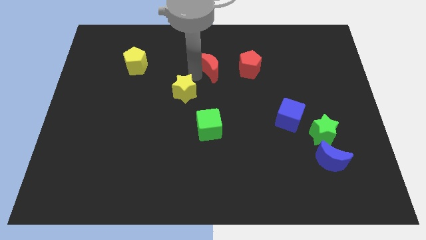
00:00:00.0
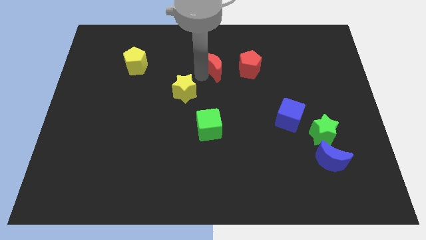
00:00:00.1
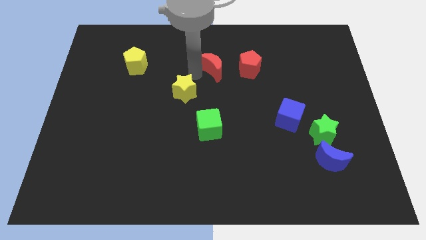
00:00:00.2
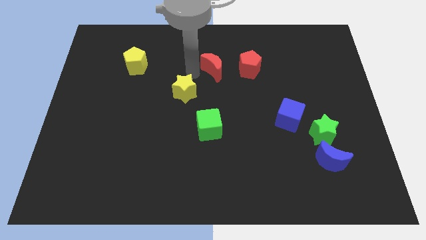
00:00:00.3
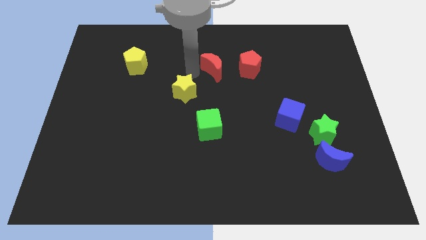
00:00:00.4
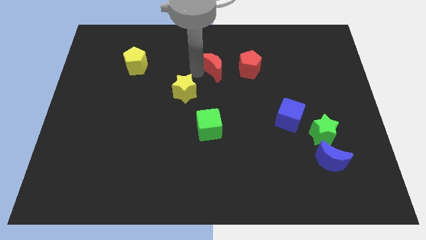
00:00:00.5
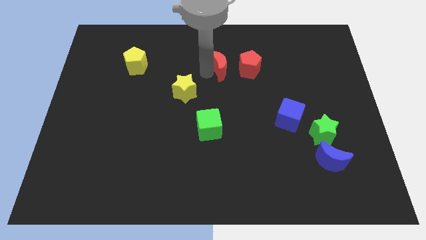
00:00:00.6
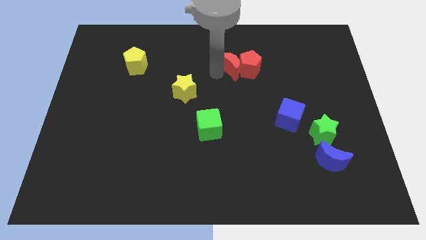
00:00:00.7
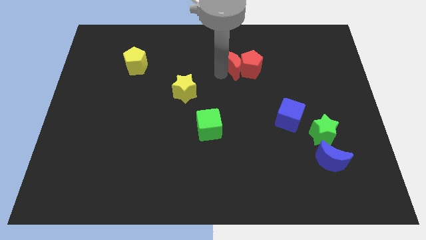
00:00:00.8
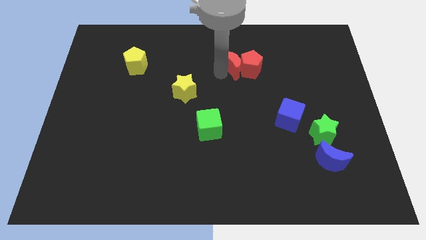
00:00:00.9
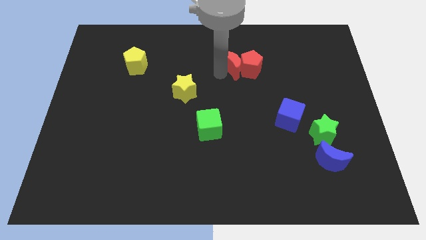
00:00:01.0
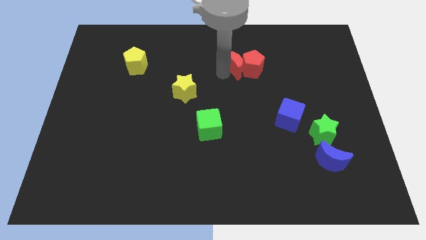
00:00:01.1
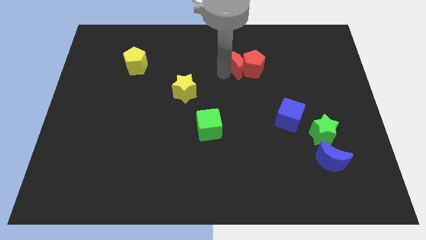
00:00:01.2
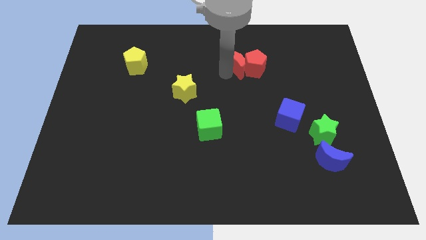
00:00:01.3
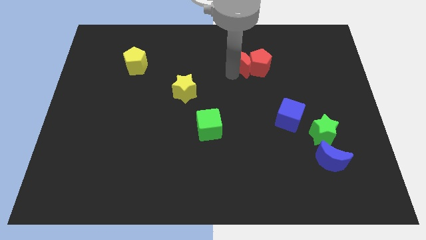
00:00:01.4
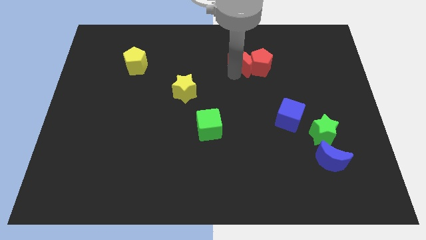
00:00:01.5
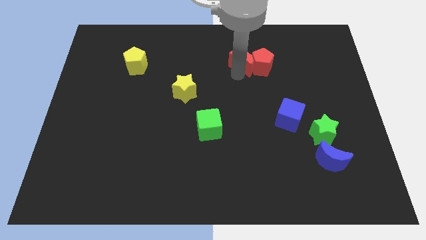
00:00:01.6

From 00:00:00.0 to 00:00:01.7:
push red crescent into red pentagon

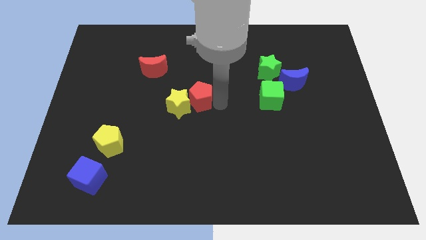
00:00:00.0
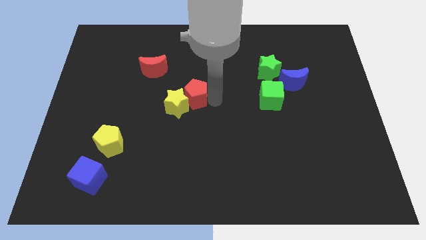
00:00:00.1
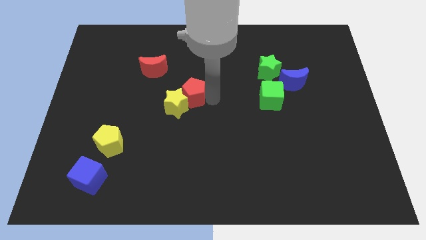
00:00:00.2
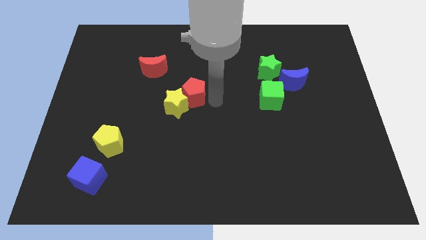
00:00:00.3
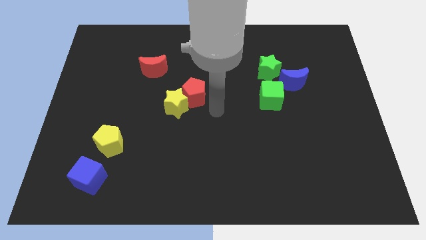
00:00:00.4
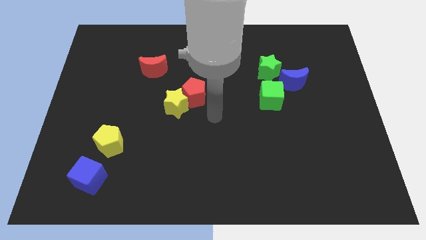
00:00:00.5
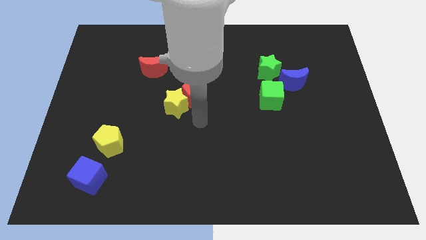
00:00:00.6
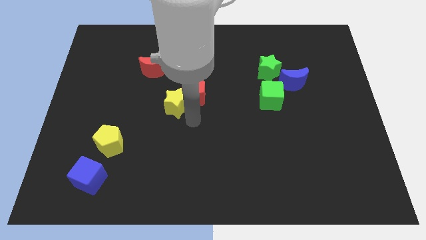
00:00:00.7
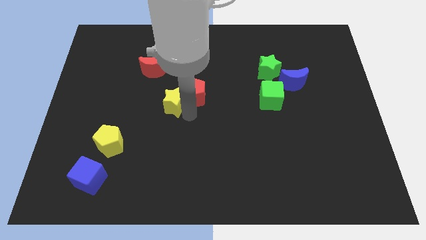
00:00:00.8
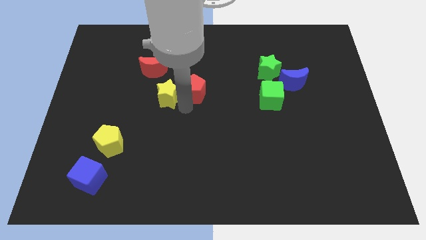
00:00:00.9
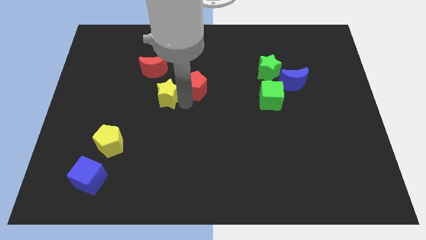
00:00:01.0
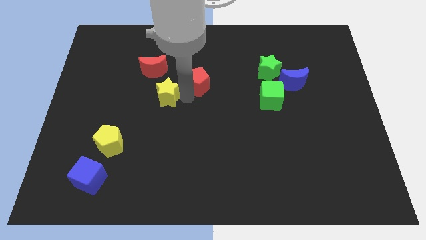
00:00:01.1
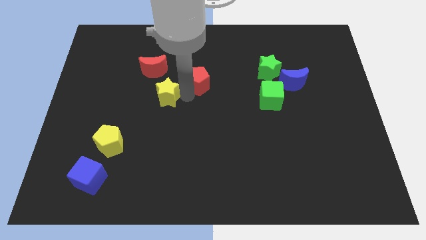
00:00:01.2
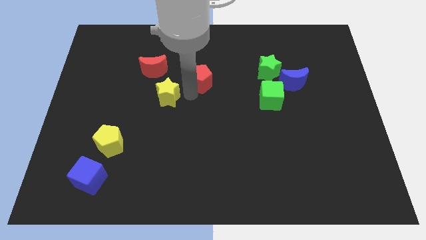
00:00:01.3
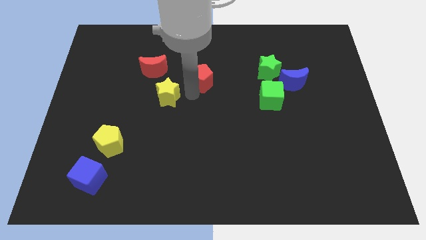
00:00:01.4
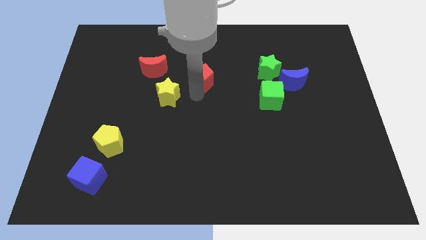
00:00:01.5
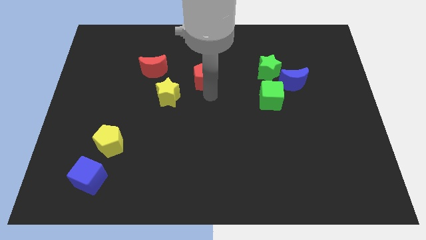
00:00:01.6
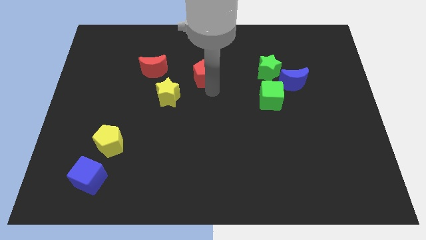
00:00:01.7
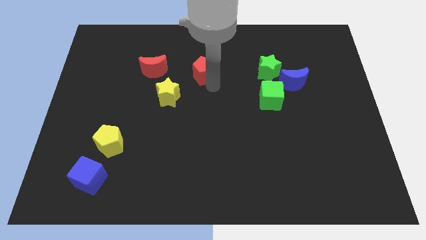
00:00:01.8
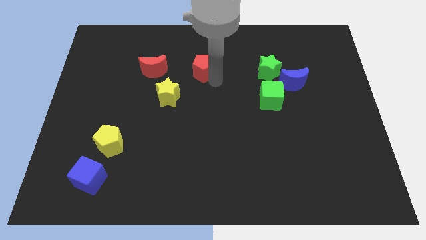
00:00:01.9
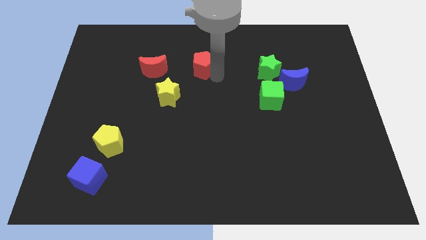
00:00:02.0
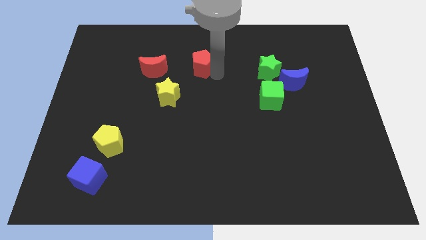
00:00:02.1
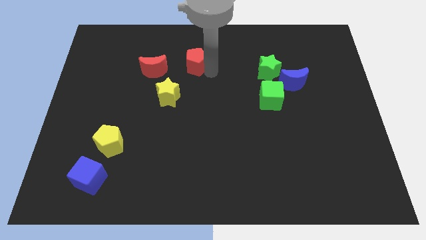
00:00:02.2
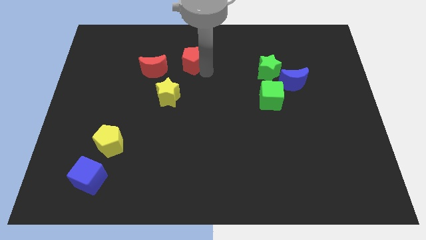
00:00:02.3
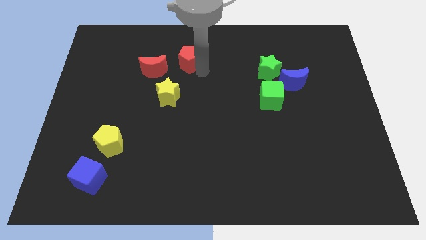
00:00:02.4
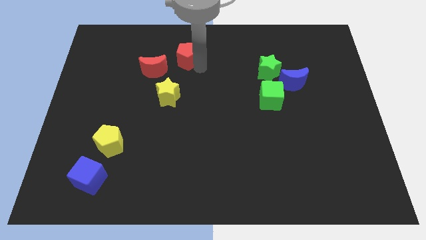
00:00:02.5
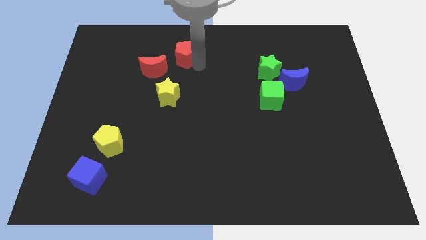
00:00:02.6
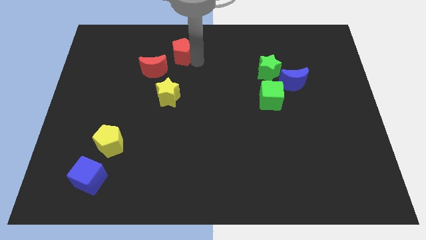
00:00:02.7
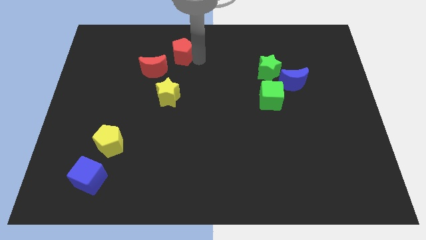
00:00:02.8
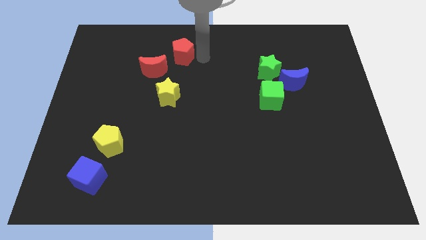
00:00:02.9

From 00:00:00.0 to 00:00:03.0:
separate the yellow star and red pentagon

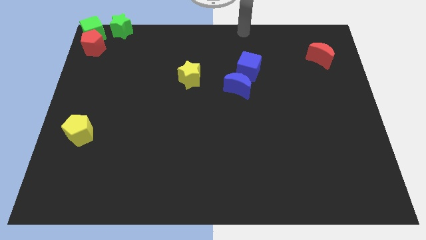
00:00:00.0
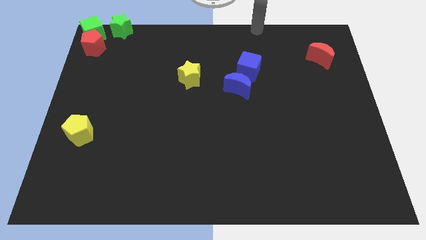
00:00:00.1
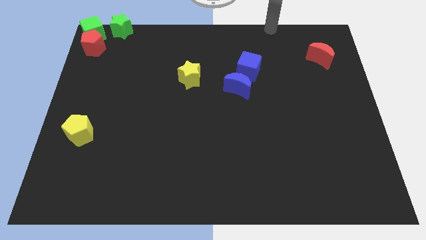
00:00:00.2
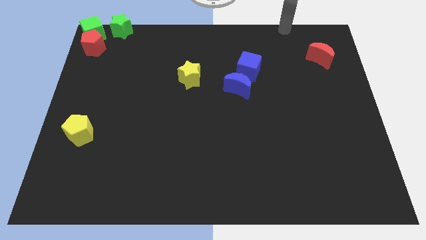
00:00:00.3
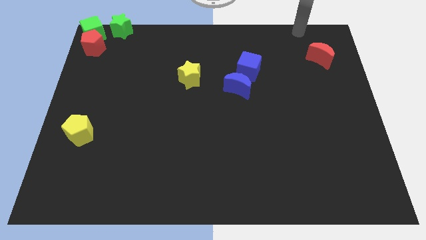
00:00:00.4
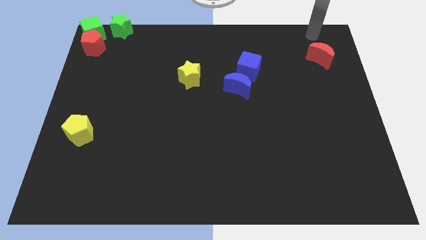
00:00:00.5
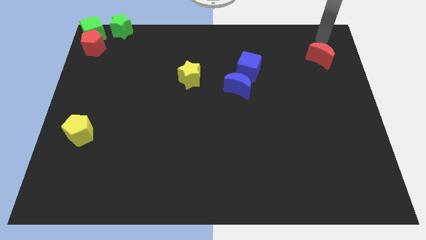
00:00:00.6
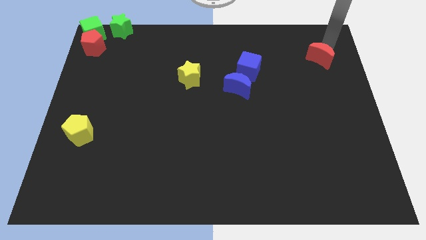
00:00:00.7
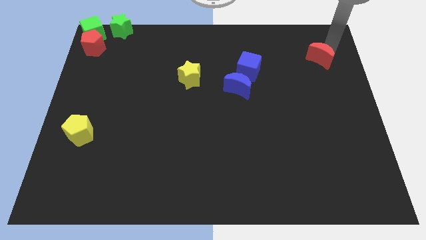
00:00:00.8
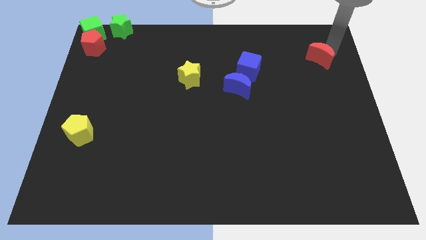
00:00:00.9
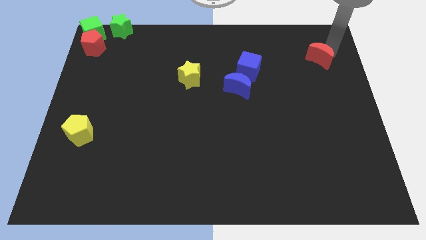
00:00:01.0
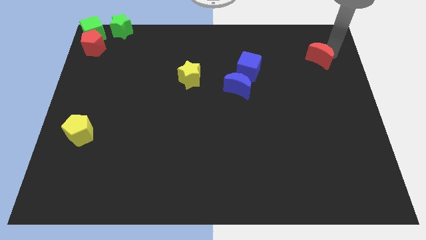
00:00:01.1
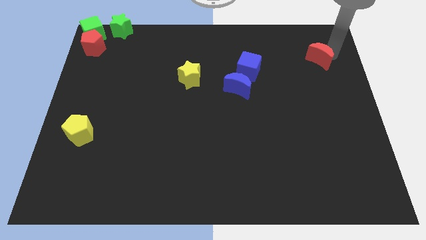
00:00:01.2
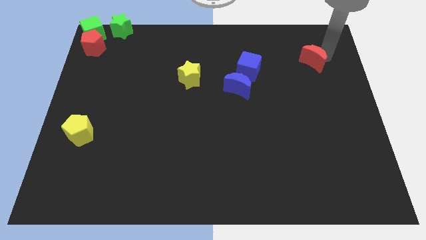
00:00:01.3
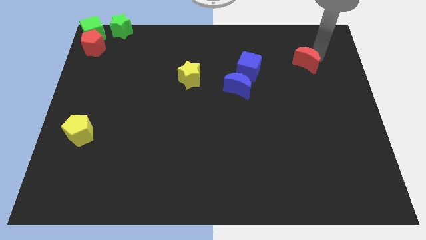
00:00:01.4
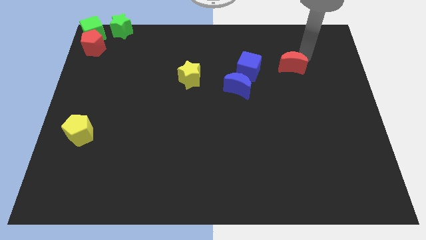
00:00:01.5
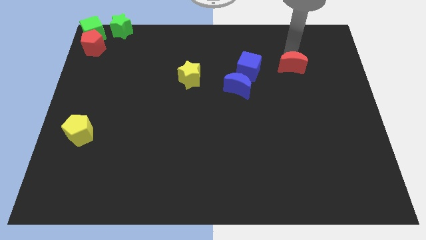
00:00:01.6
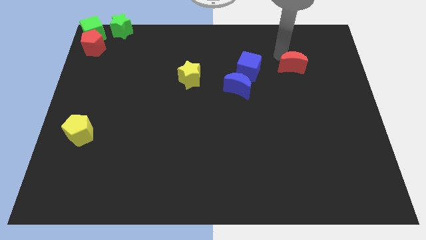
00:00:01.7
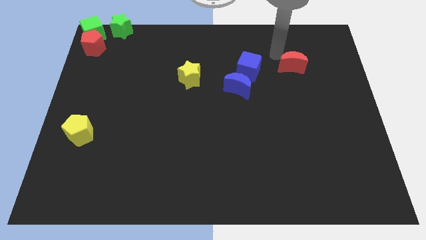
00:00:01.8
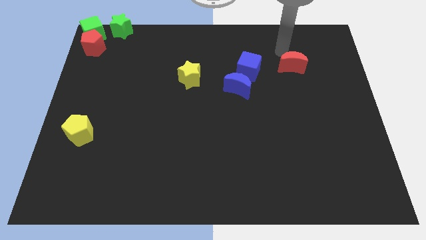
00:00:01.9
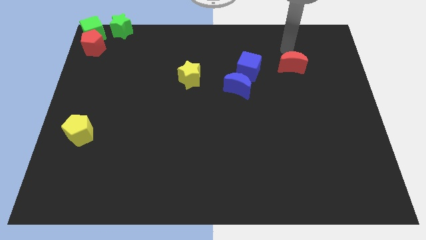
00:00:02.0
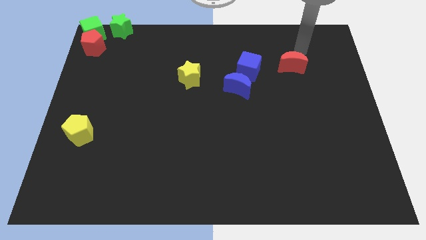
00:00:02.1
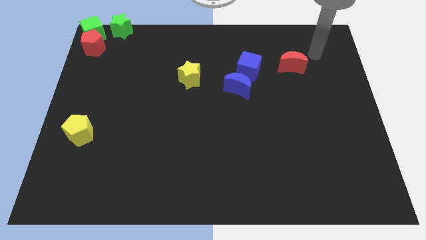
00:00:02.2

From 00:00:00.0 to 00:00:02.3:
put the red moon to the right of blue cube

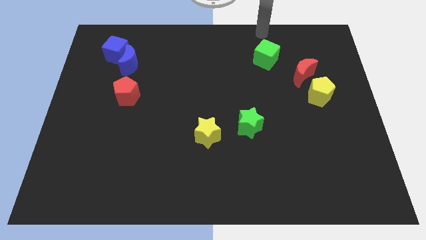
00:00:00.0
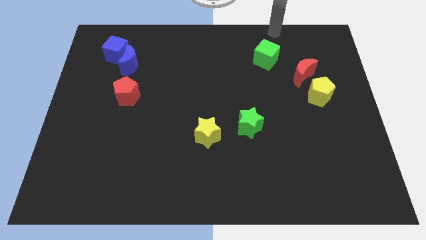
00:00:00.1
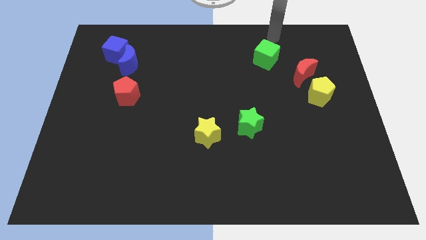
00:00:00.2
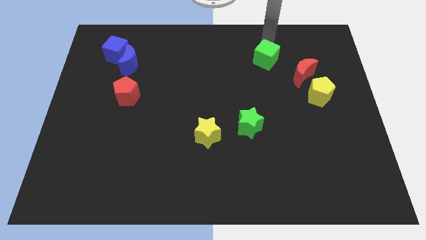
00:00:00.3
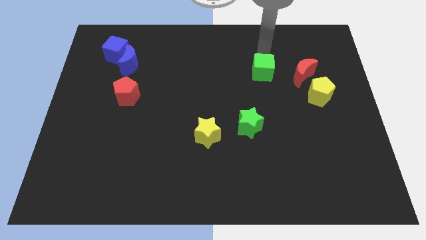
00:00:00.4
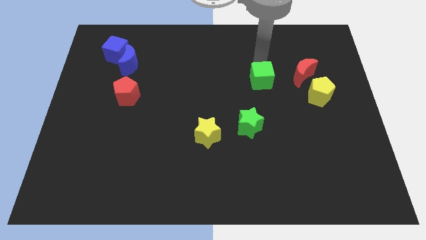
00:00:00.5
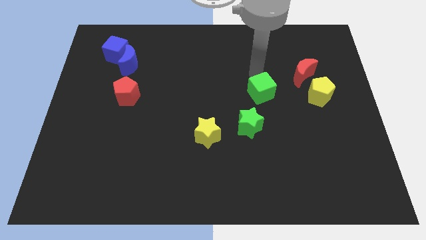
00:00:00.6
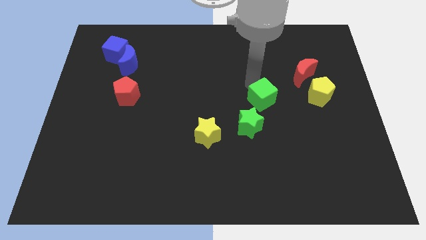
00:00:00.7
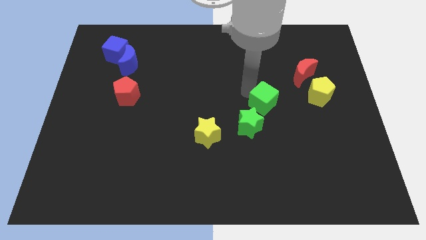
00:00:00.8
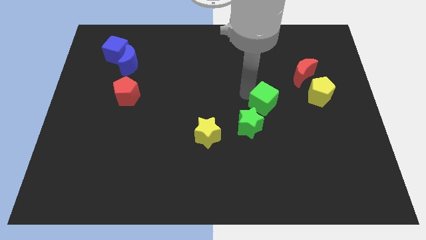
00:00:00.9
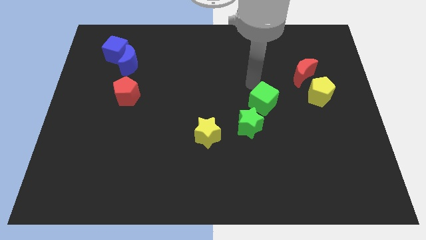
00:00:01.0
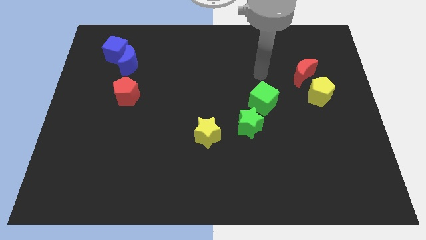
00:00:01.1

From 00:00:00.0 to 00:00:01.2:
move the green cube above to the green star

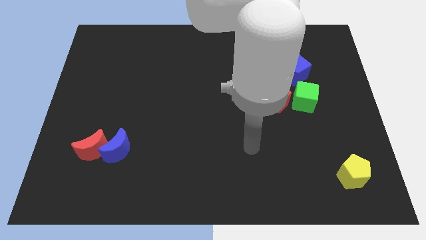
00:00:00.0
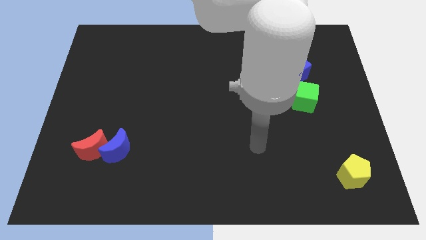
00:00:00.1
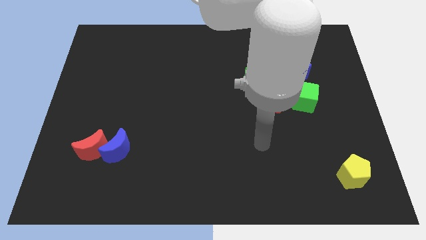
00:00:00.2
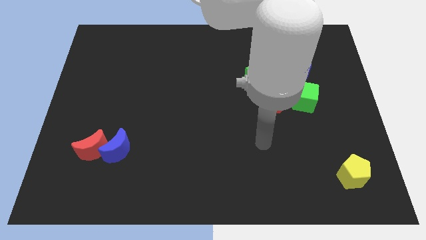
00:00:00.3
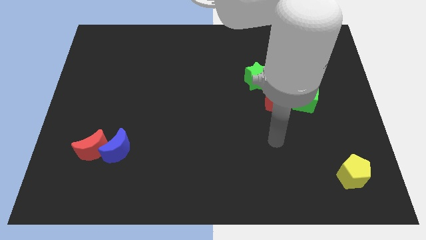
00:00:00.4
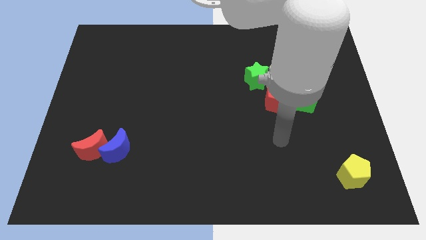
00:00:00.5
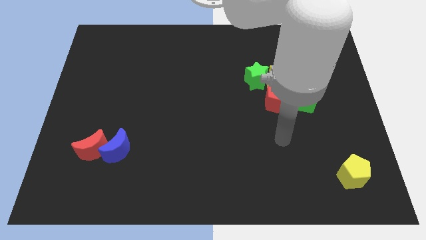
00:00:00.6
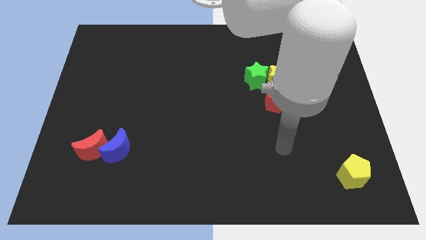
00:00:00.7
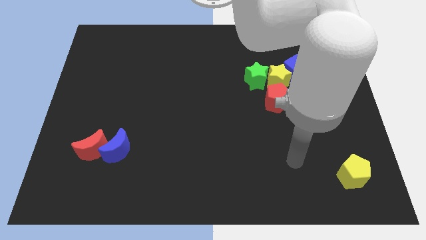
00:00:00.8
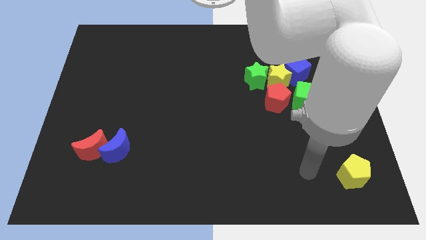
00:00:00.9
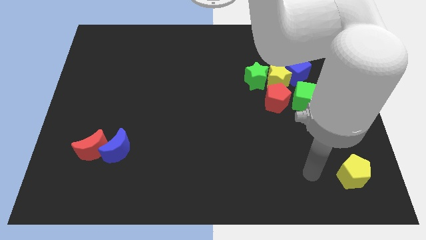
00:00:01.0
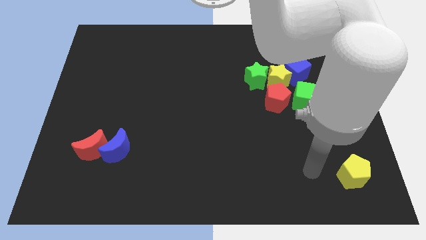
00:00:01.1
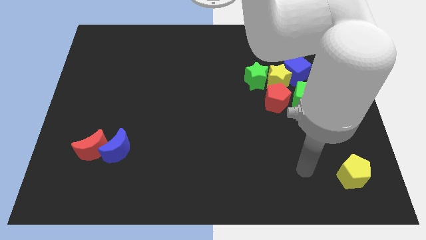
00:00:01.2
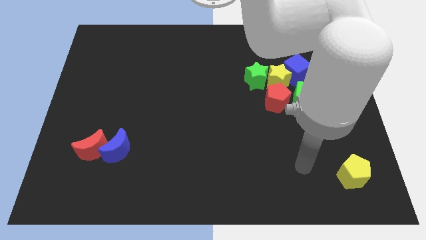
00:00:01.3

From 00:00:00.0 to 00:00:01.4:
place your arm towards the bottom right
